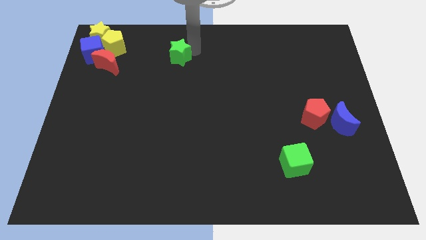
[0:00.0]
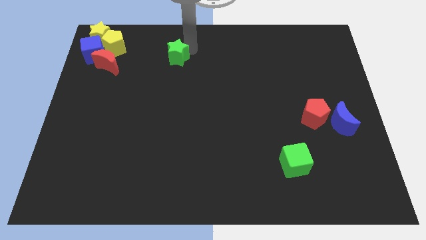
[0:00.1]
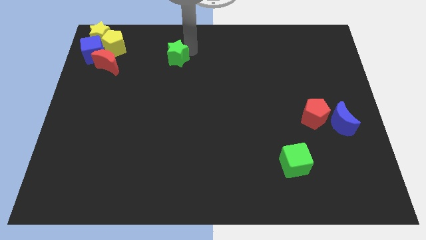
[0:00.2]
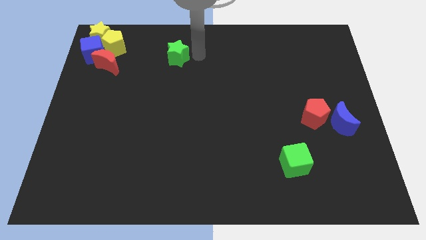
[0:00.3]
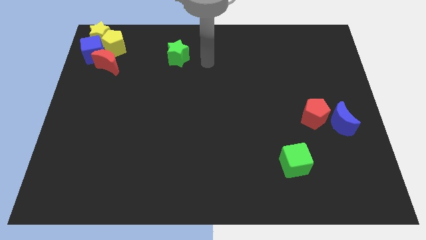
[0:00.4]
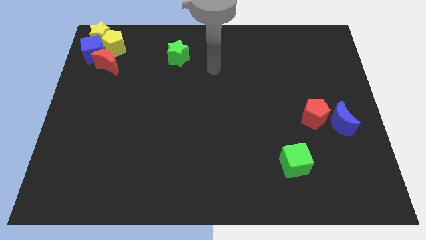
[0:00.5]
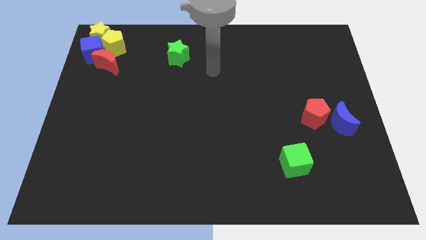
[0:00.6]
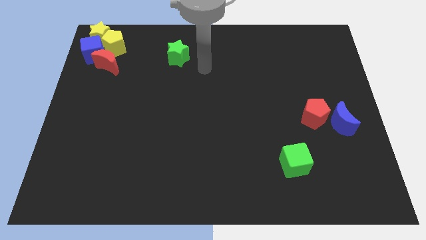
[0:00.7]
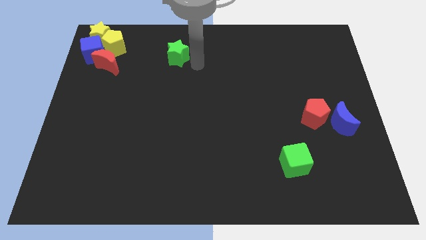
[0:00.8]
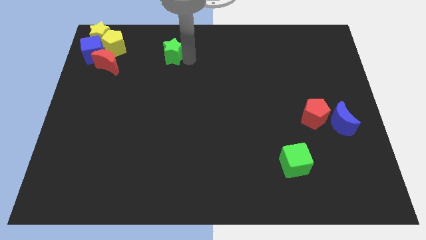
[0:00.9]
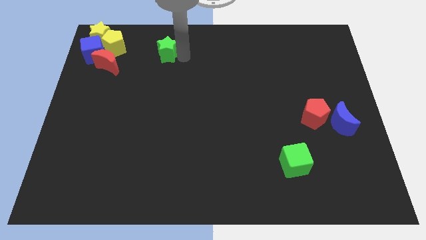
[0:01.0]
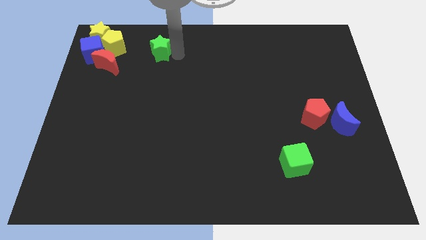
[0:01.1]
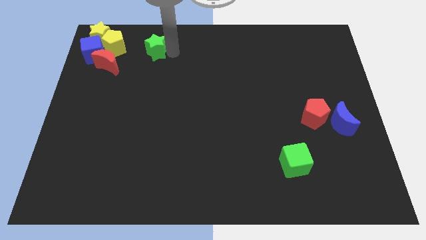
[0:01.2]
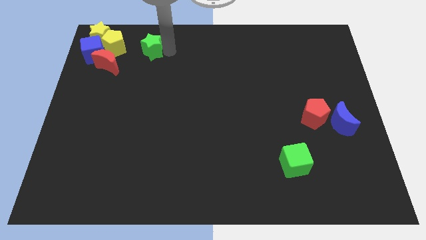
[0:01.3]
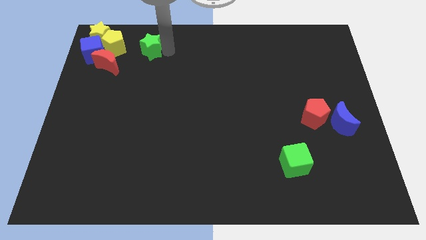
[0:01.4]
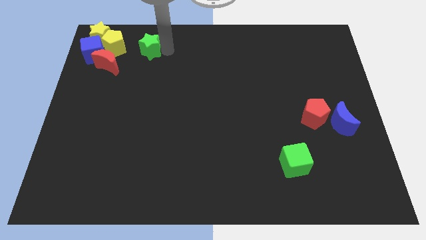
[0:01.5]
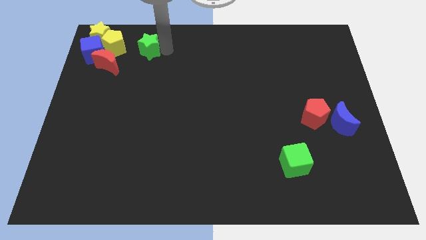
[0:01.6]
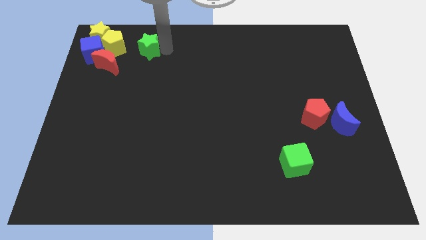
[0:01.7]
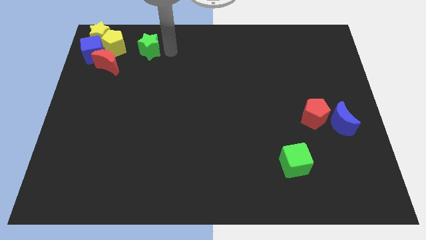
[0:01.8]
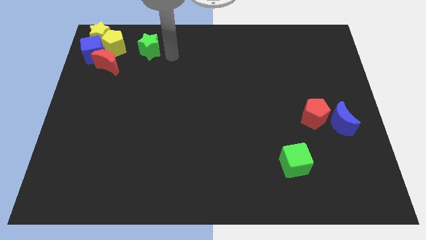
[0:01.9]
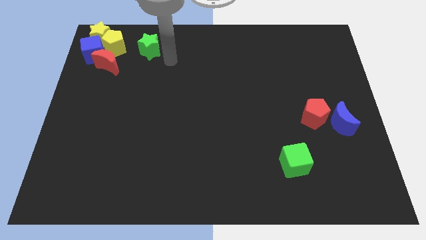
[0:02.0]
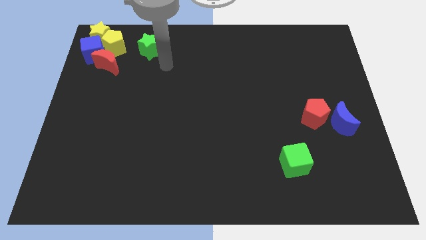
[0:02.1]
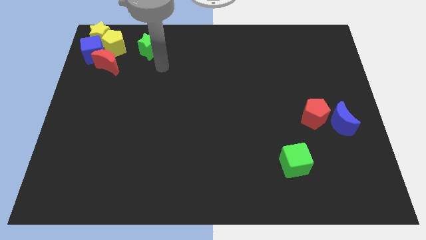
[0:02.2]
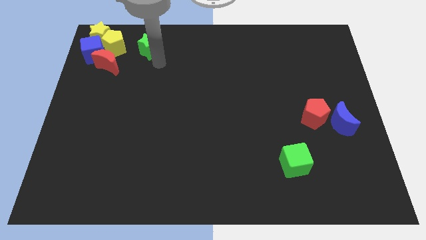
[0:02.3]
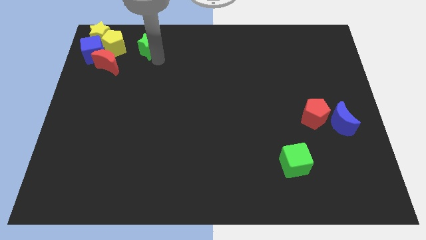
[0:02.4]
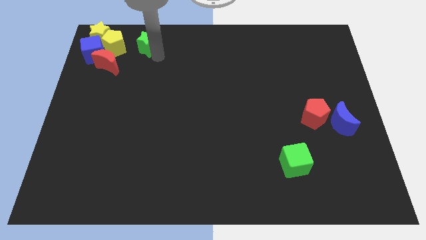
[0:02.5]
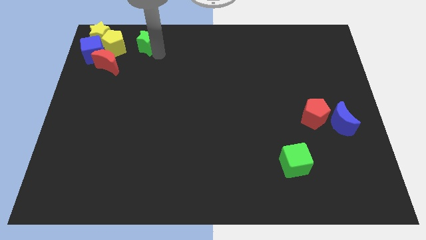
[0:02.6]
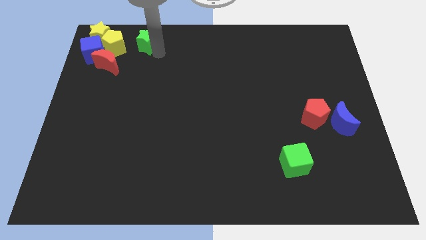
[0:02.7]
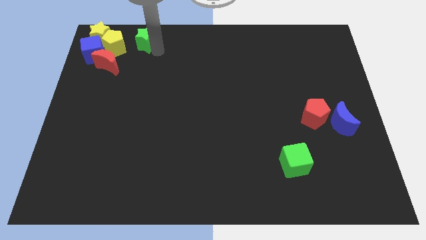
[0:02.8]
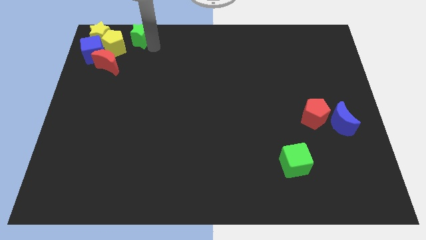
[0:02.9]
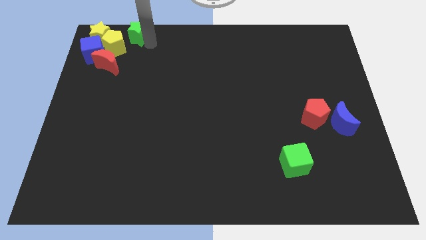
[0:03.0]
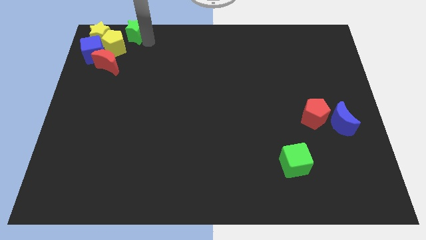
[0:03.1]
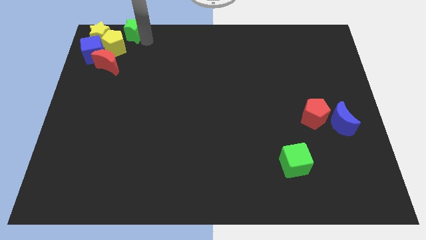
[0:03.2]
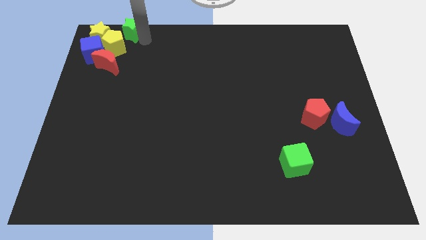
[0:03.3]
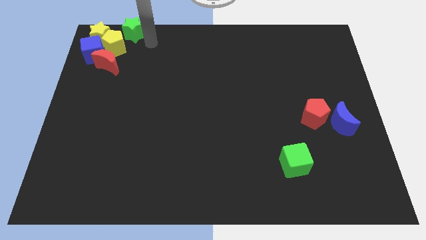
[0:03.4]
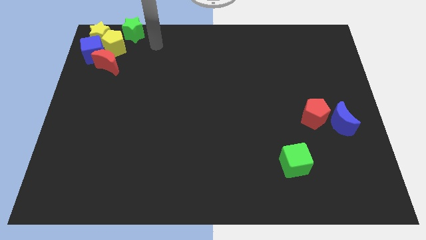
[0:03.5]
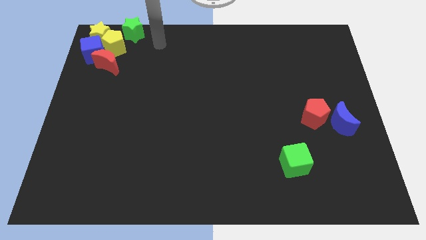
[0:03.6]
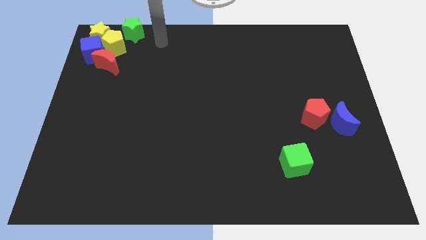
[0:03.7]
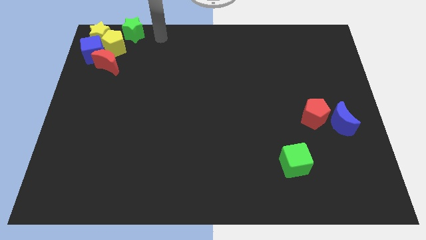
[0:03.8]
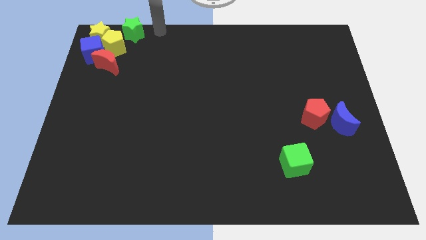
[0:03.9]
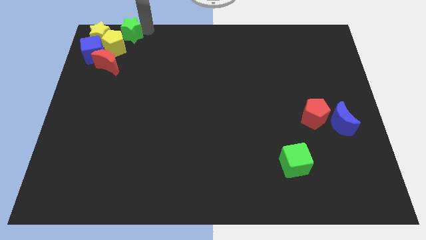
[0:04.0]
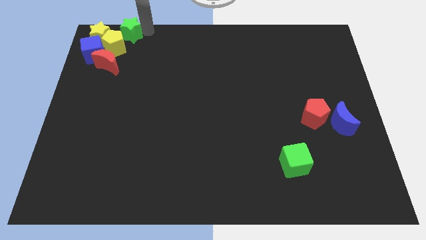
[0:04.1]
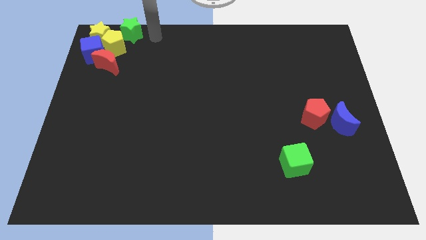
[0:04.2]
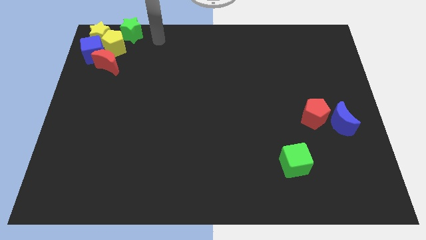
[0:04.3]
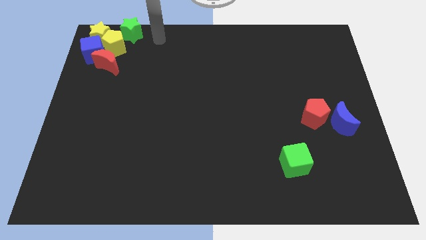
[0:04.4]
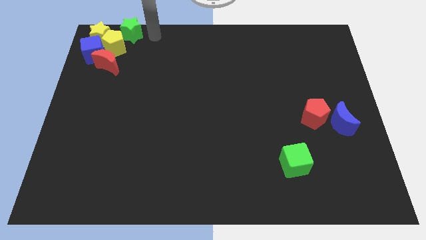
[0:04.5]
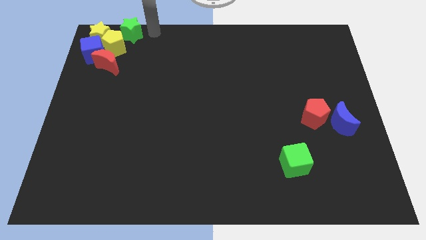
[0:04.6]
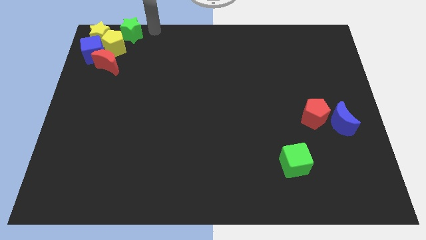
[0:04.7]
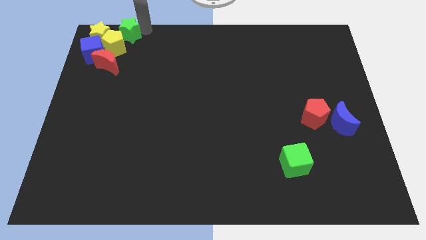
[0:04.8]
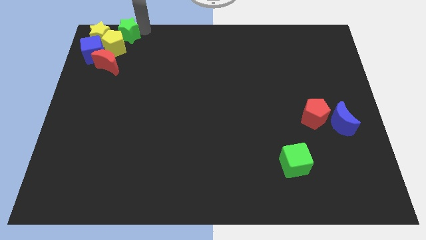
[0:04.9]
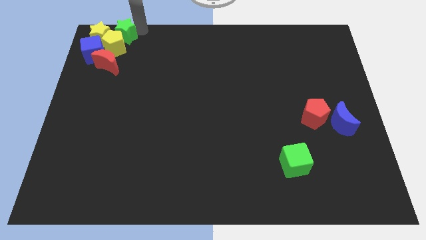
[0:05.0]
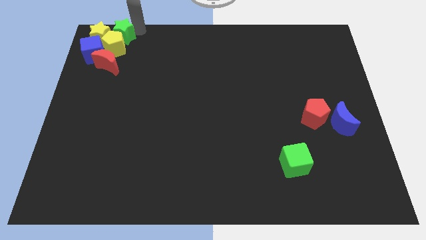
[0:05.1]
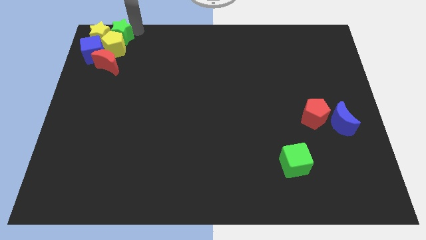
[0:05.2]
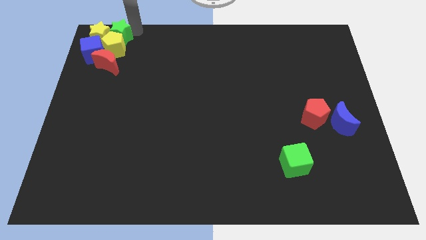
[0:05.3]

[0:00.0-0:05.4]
push the green star into the group of object

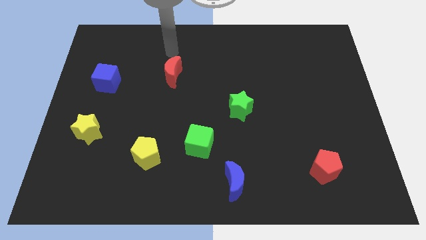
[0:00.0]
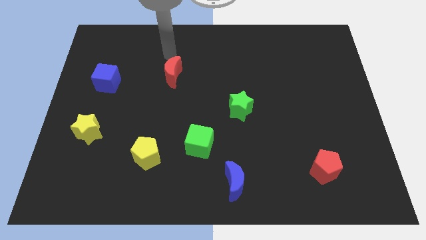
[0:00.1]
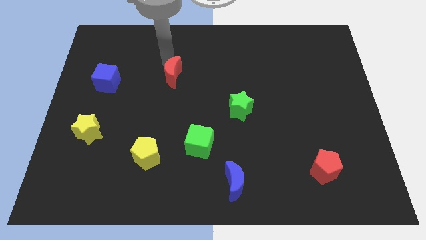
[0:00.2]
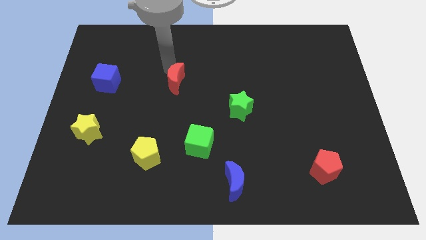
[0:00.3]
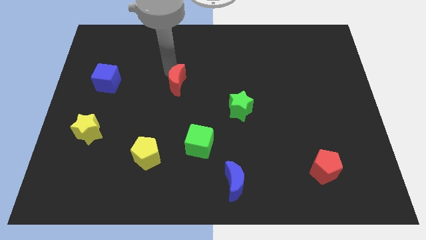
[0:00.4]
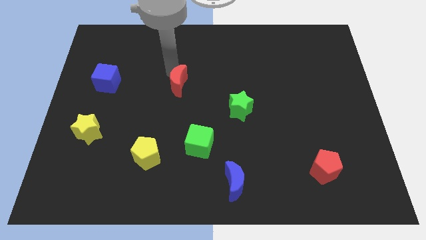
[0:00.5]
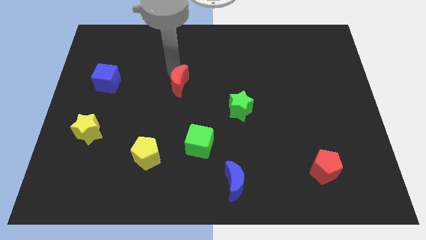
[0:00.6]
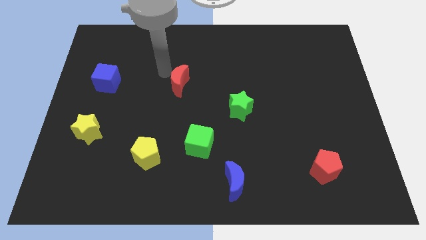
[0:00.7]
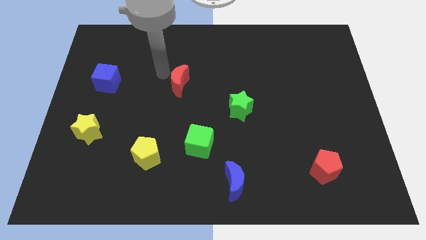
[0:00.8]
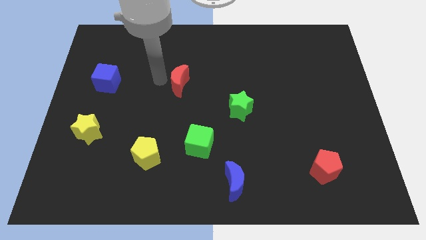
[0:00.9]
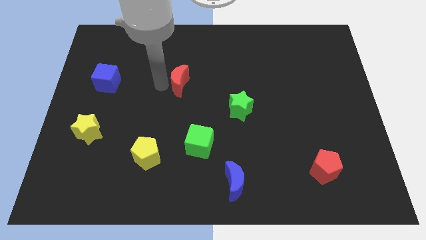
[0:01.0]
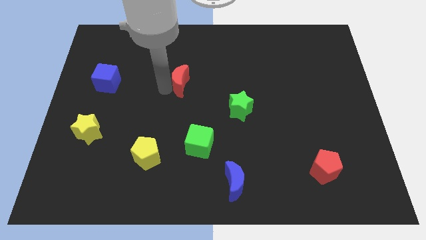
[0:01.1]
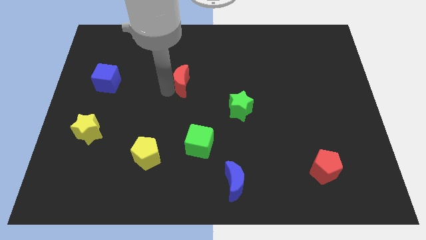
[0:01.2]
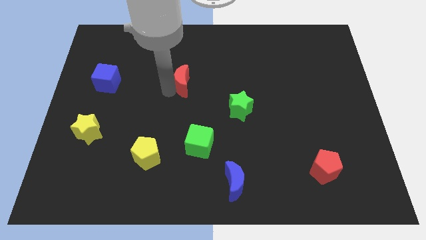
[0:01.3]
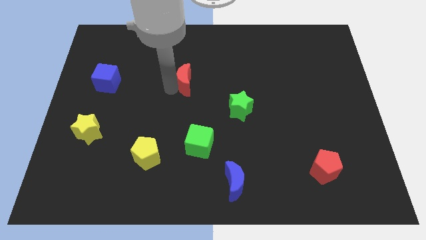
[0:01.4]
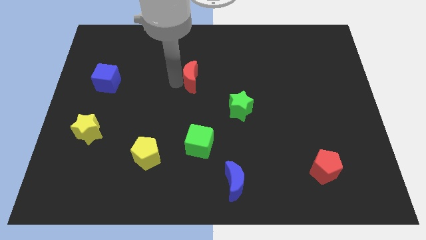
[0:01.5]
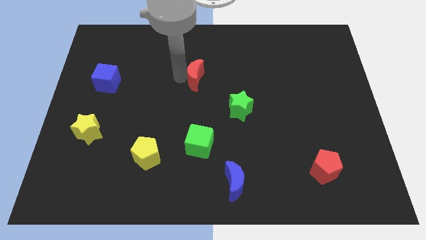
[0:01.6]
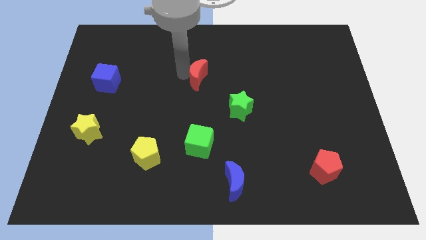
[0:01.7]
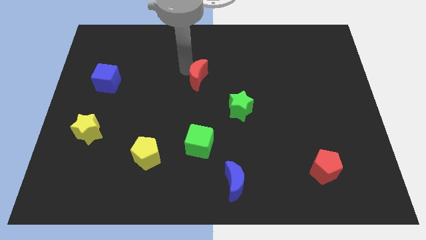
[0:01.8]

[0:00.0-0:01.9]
place red moon to the top of green cube

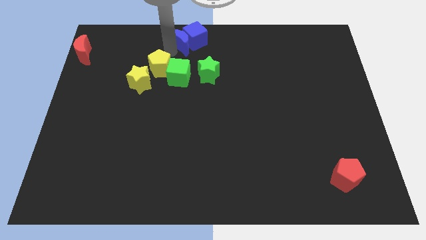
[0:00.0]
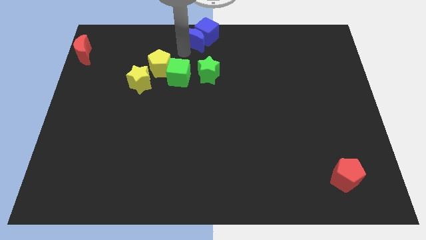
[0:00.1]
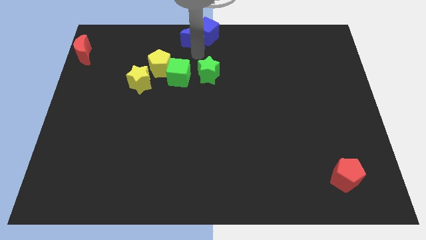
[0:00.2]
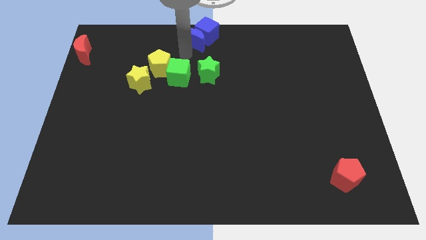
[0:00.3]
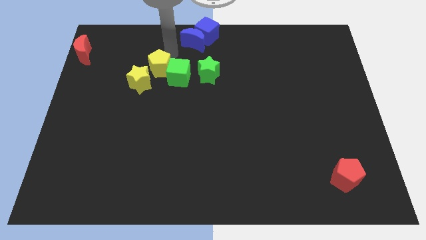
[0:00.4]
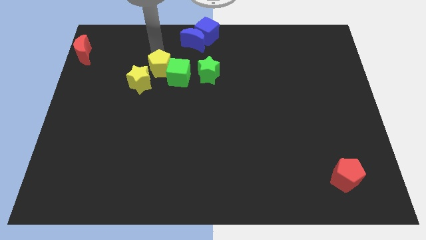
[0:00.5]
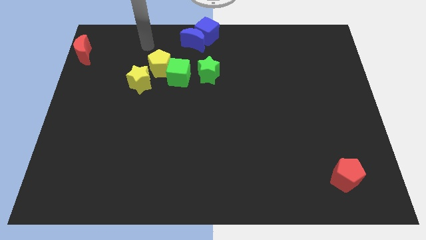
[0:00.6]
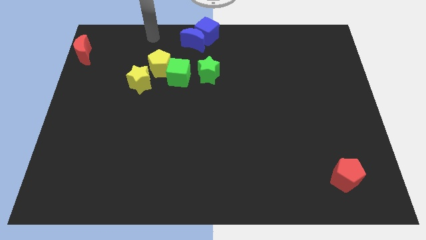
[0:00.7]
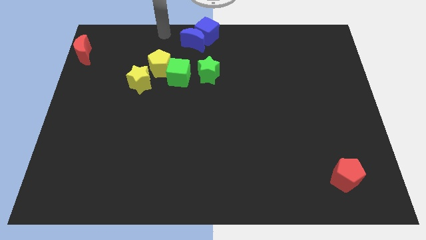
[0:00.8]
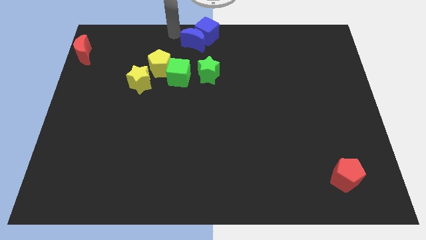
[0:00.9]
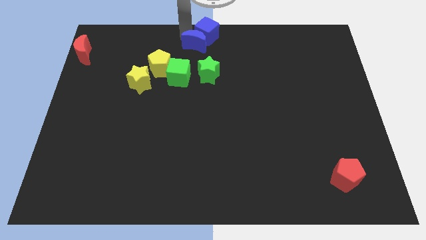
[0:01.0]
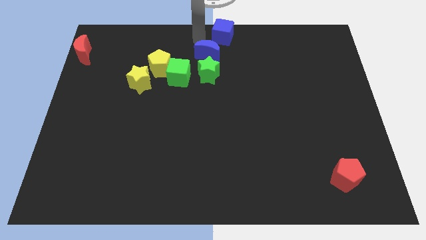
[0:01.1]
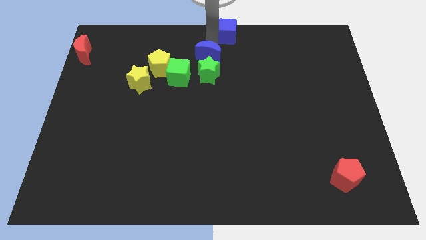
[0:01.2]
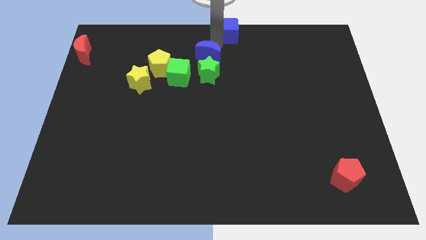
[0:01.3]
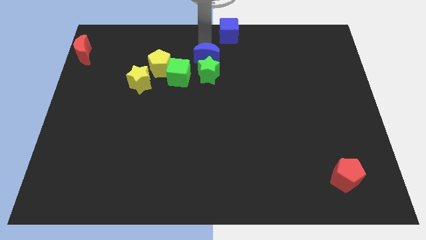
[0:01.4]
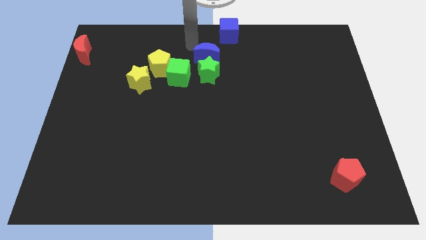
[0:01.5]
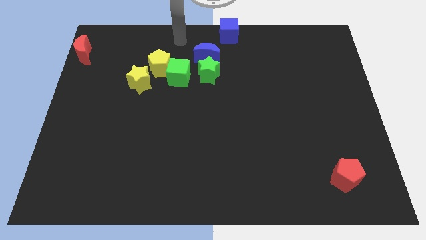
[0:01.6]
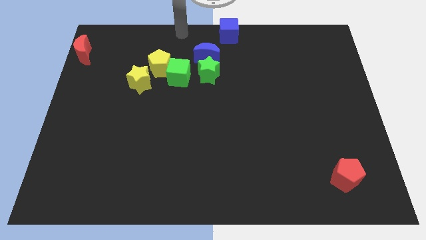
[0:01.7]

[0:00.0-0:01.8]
separate the blue cube from the blue crescent
